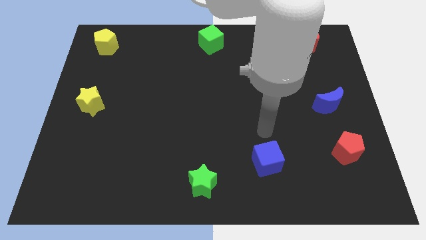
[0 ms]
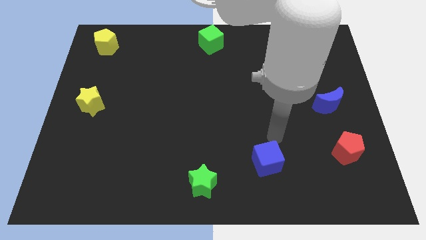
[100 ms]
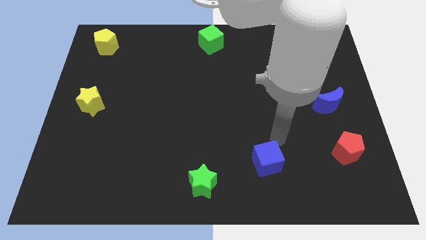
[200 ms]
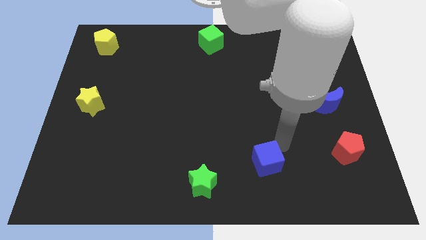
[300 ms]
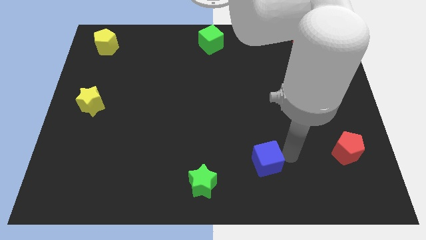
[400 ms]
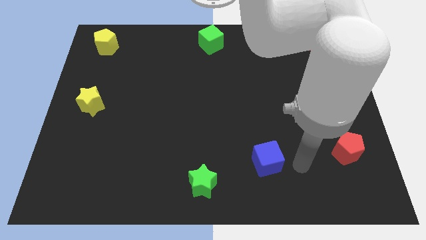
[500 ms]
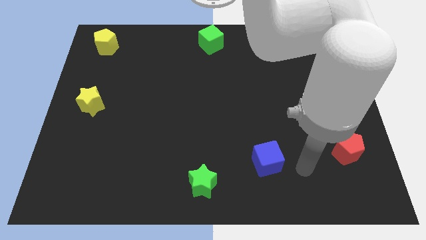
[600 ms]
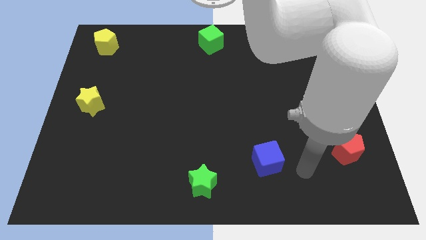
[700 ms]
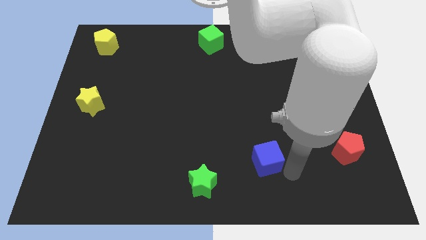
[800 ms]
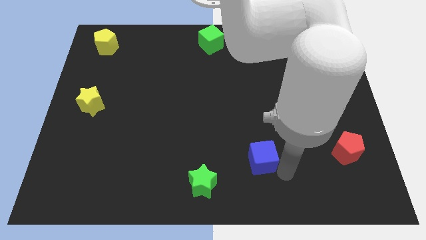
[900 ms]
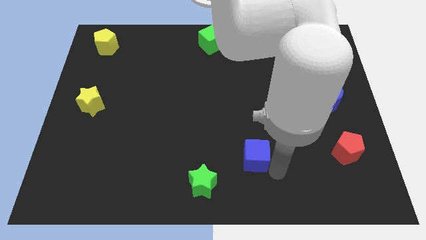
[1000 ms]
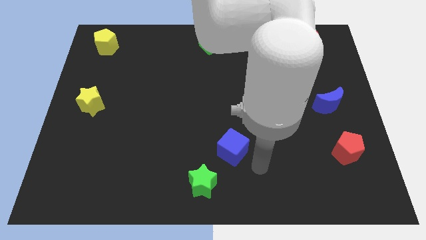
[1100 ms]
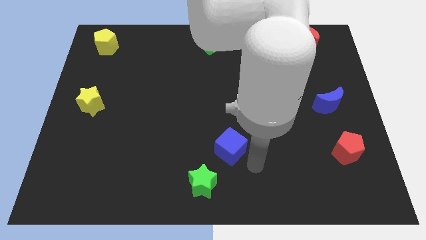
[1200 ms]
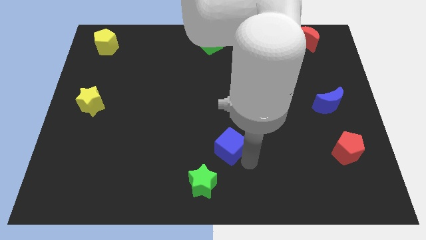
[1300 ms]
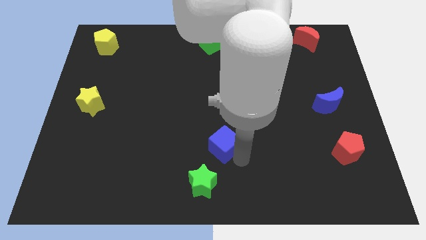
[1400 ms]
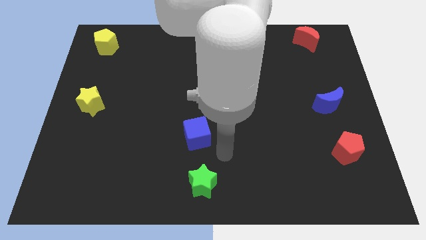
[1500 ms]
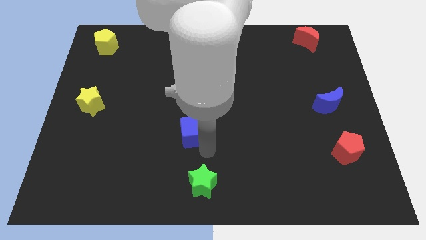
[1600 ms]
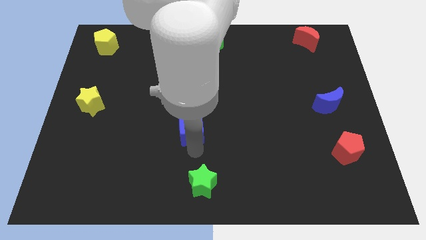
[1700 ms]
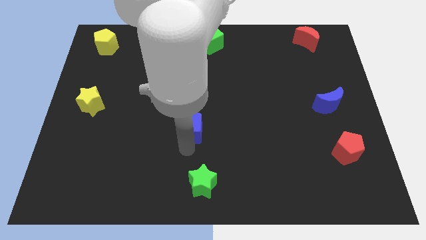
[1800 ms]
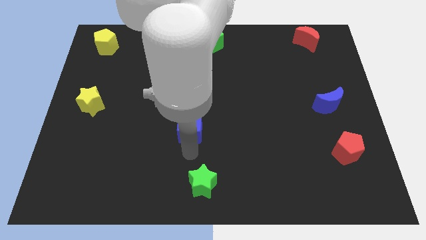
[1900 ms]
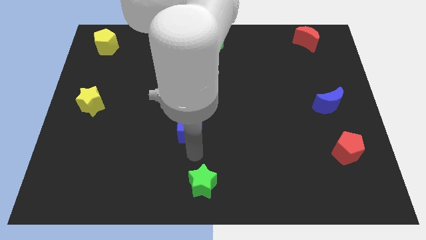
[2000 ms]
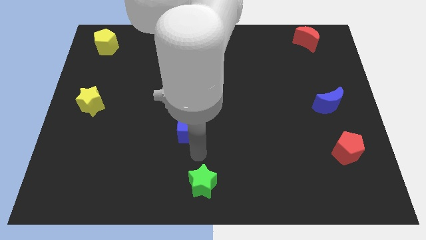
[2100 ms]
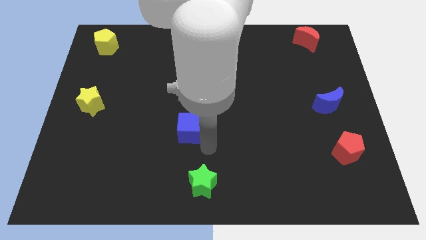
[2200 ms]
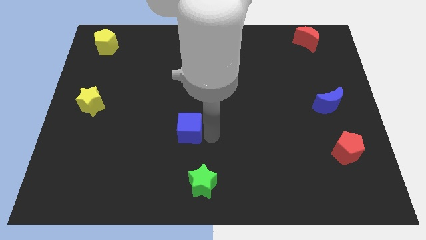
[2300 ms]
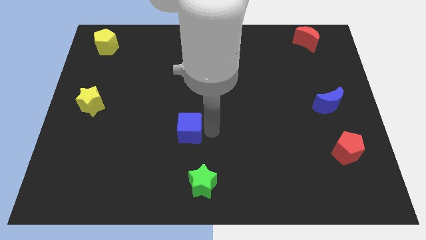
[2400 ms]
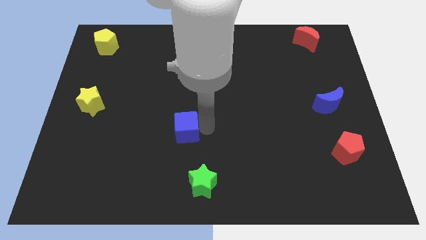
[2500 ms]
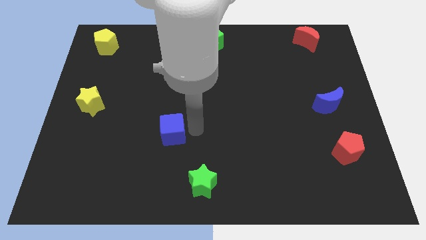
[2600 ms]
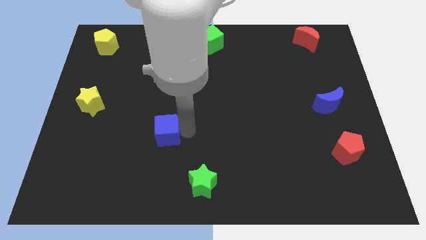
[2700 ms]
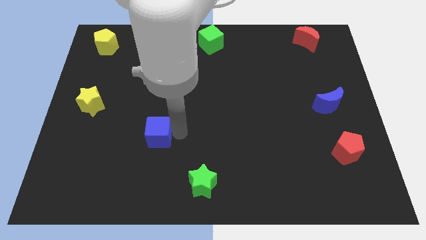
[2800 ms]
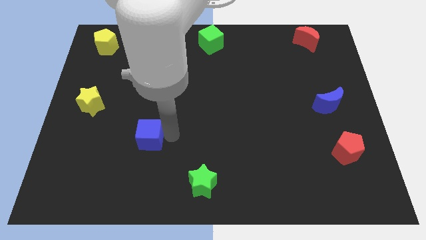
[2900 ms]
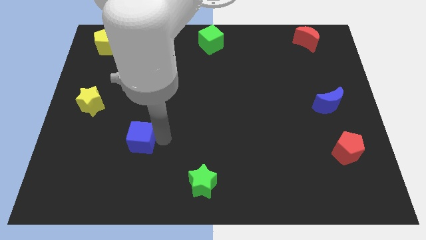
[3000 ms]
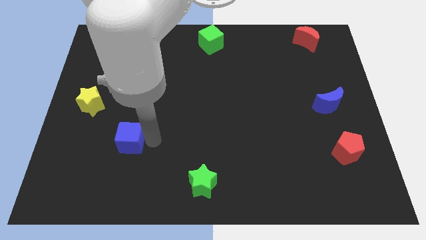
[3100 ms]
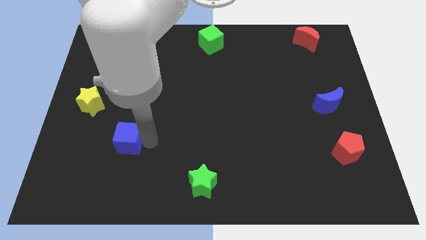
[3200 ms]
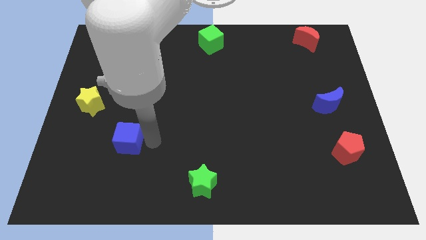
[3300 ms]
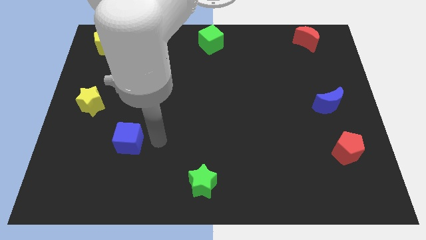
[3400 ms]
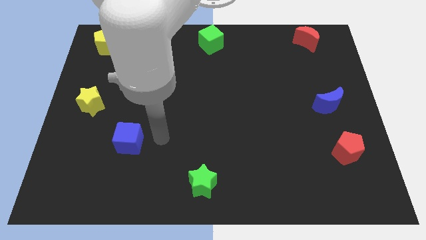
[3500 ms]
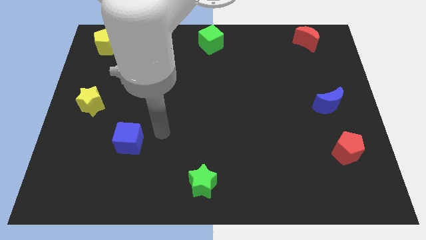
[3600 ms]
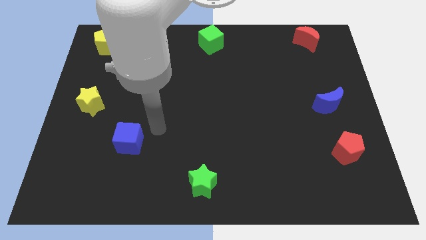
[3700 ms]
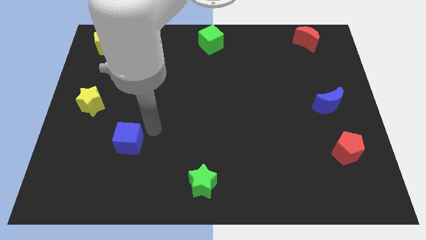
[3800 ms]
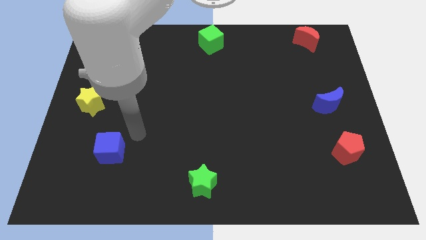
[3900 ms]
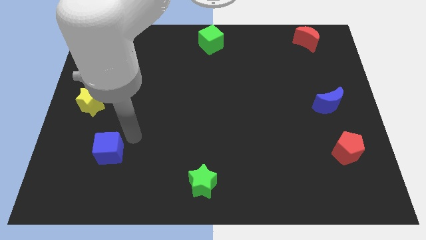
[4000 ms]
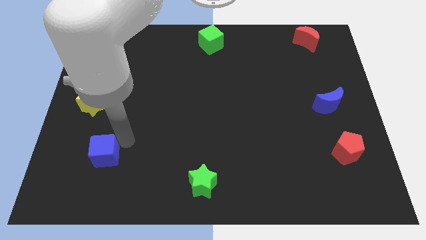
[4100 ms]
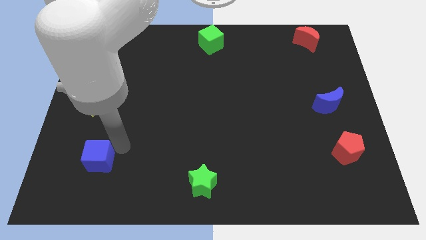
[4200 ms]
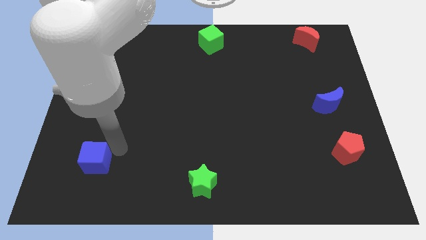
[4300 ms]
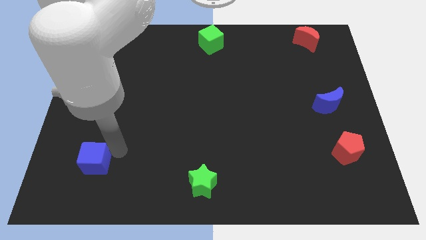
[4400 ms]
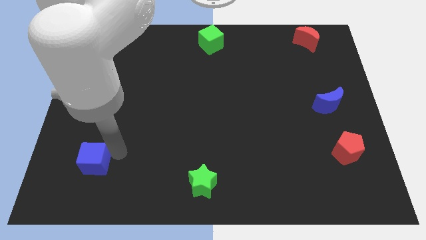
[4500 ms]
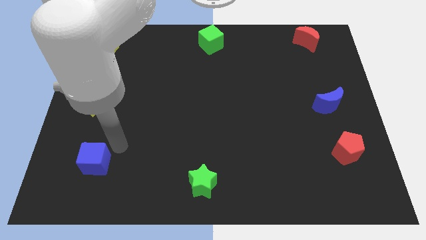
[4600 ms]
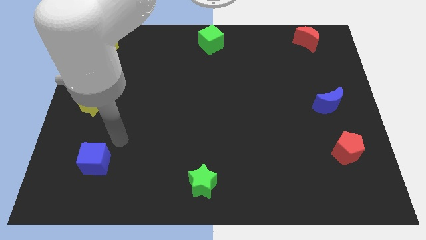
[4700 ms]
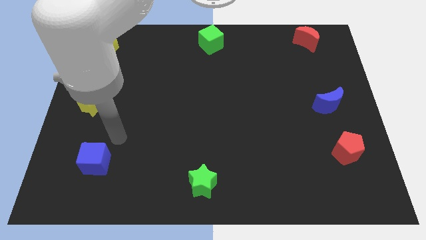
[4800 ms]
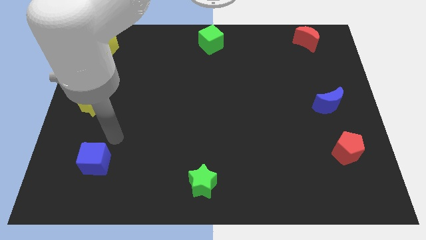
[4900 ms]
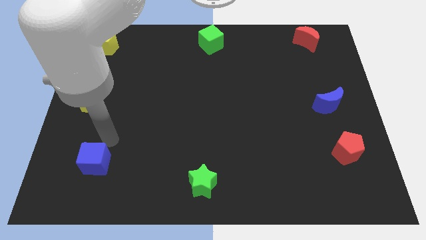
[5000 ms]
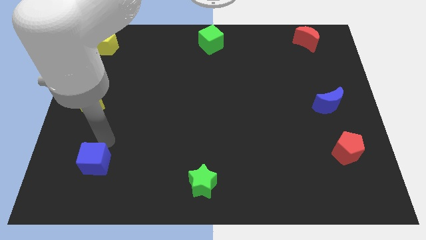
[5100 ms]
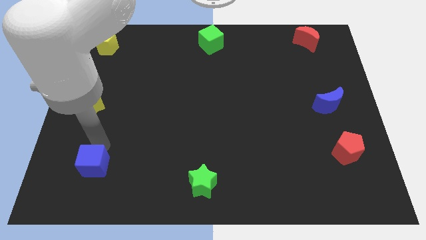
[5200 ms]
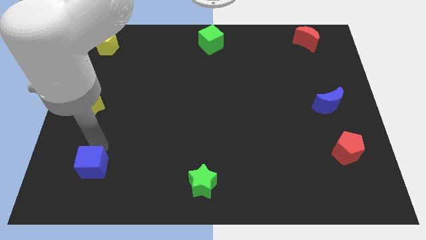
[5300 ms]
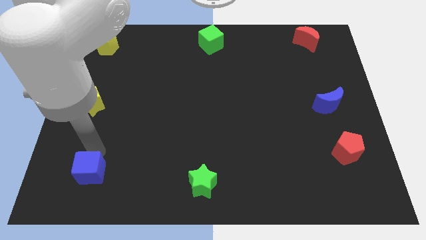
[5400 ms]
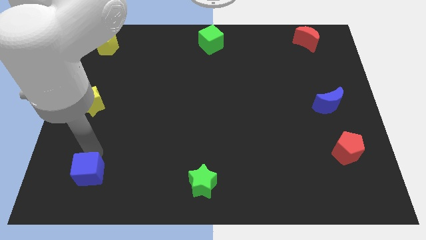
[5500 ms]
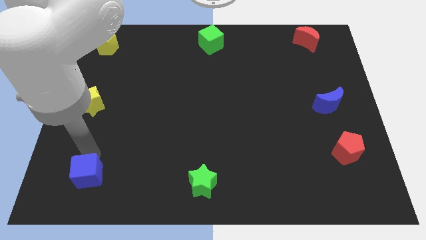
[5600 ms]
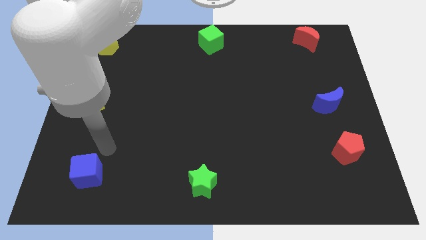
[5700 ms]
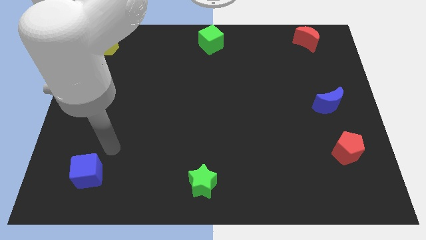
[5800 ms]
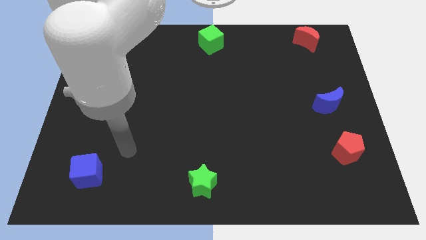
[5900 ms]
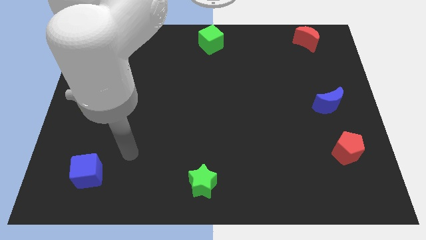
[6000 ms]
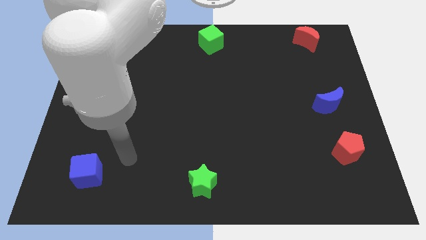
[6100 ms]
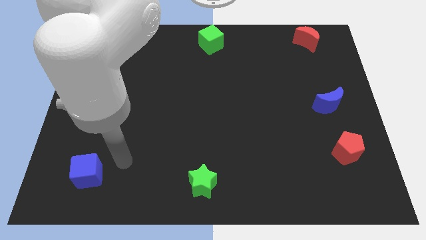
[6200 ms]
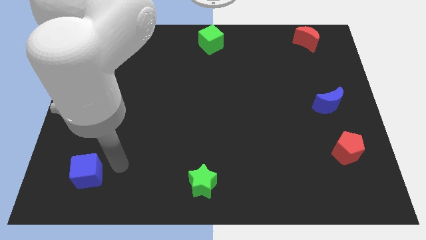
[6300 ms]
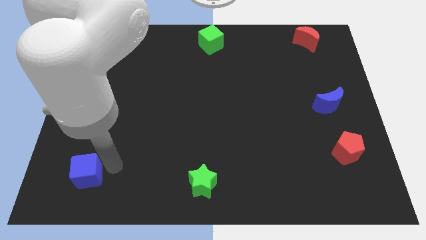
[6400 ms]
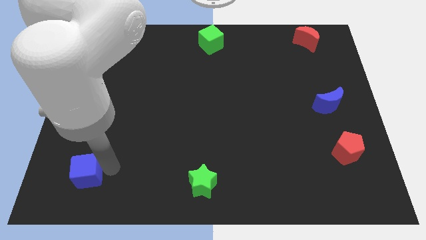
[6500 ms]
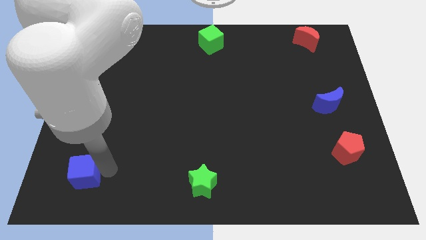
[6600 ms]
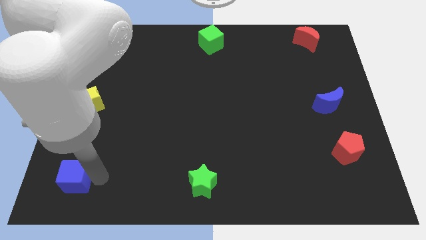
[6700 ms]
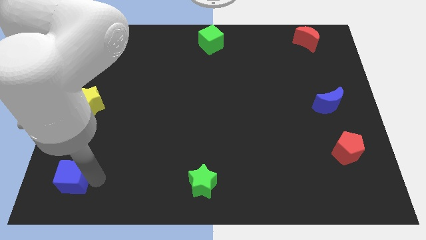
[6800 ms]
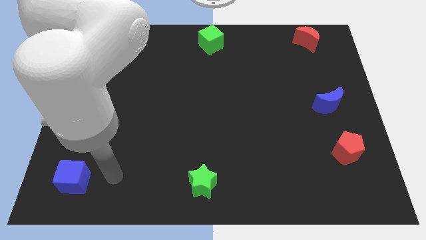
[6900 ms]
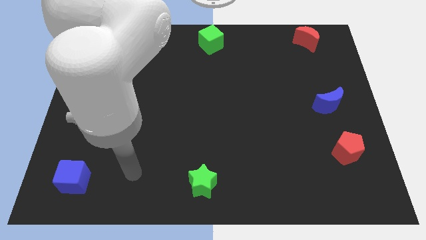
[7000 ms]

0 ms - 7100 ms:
push blue cube towards bottom left of the board

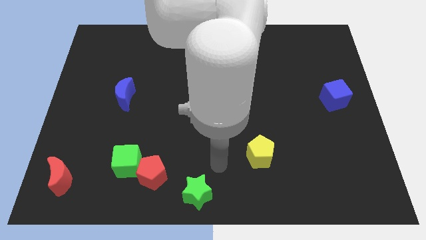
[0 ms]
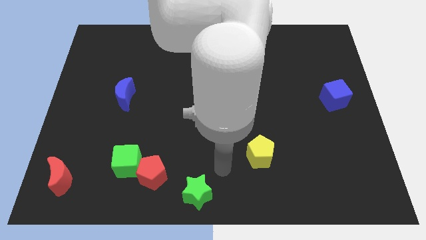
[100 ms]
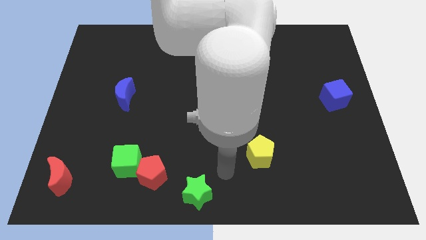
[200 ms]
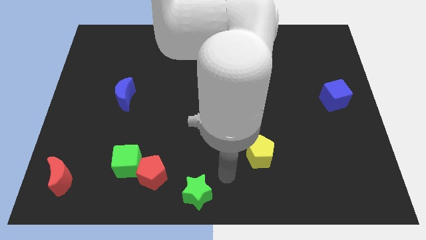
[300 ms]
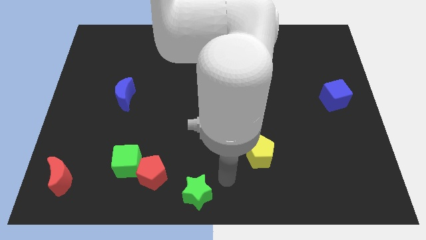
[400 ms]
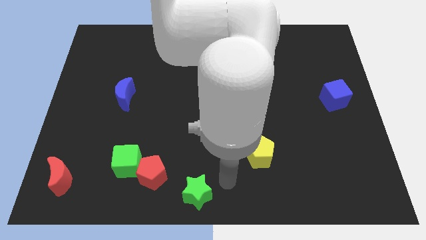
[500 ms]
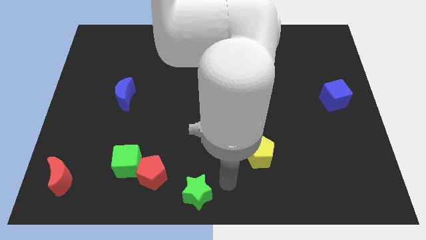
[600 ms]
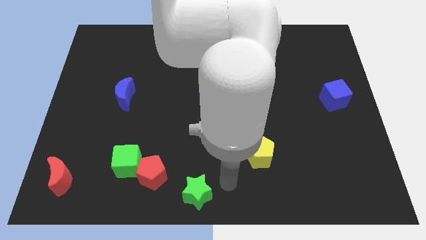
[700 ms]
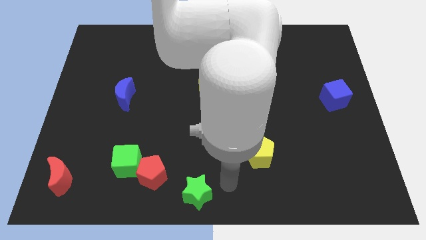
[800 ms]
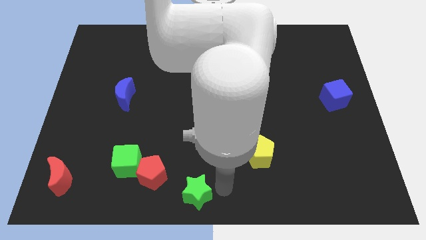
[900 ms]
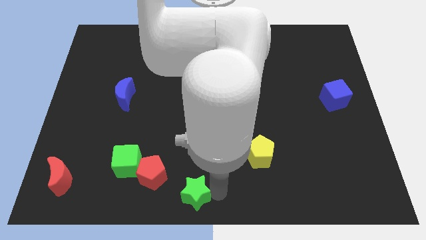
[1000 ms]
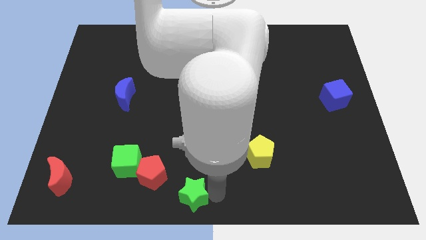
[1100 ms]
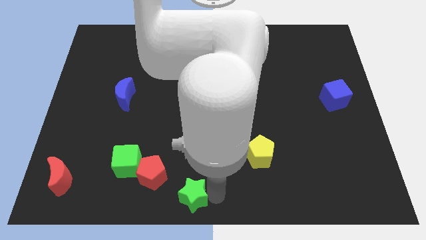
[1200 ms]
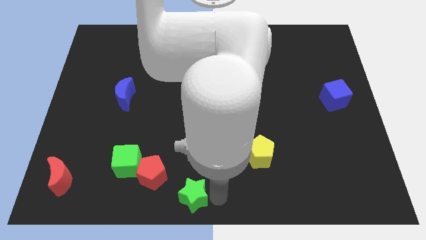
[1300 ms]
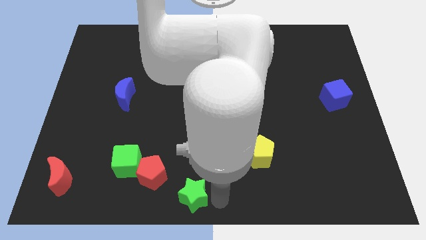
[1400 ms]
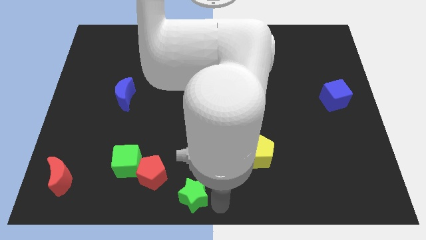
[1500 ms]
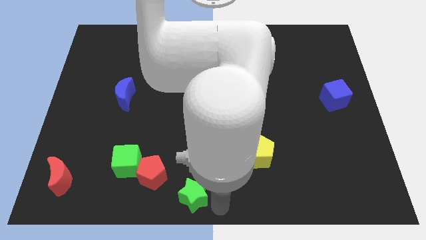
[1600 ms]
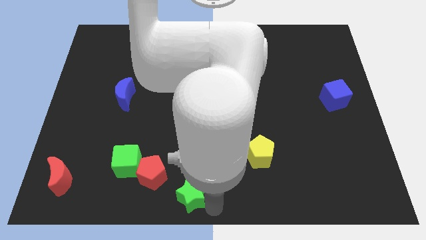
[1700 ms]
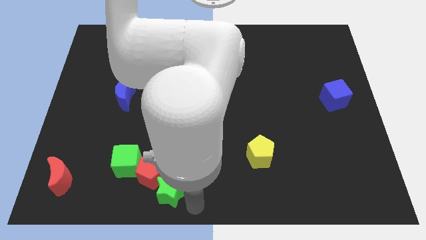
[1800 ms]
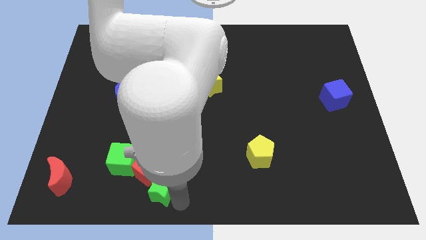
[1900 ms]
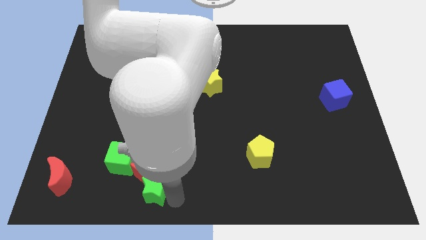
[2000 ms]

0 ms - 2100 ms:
push green star close to red pentagon
